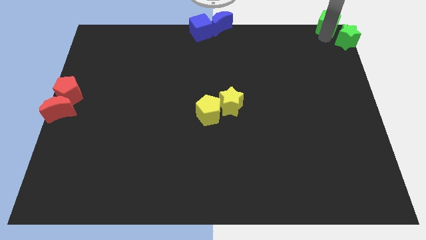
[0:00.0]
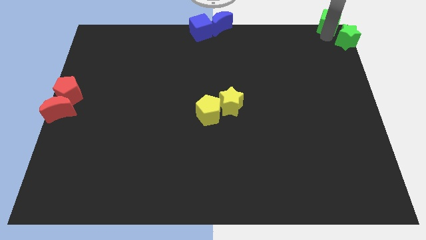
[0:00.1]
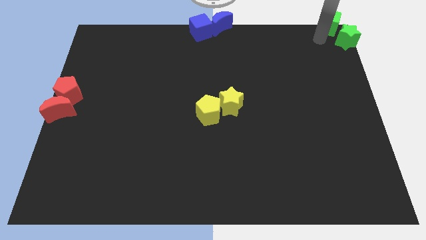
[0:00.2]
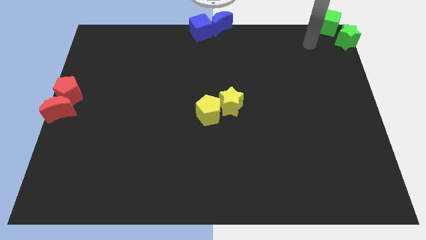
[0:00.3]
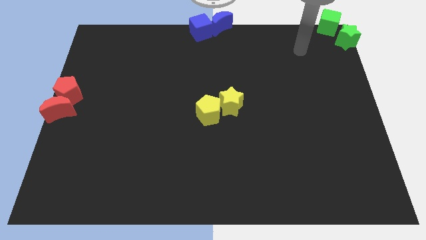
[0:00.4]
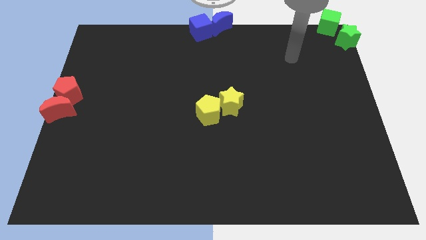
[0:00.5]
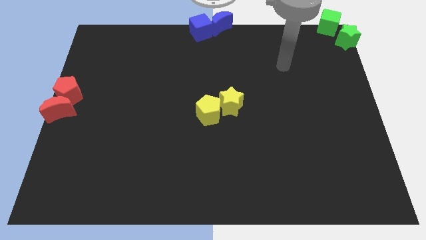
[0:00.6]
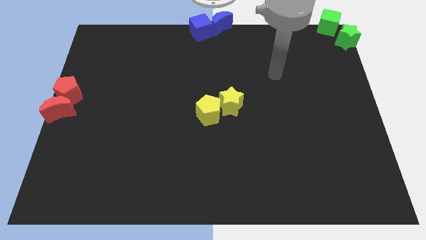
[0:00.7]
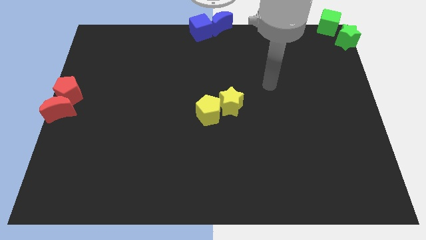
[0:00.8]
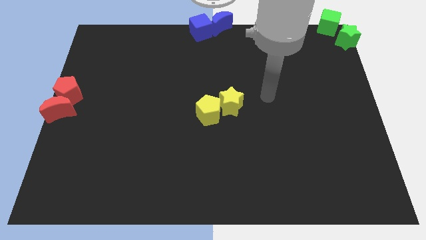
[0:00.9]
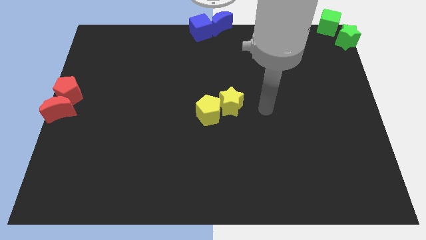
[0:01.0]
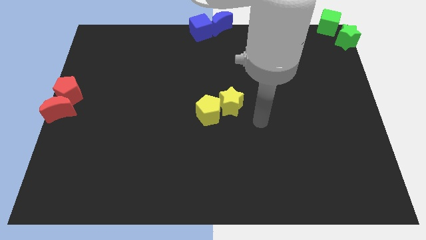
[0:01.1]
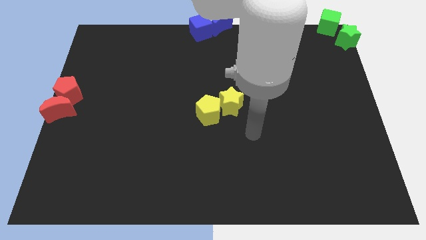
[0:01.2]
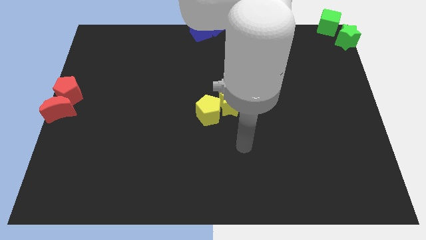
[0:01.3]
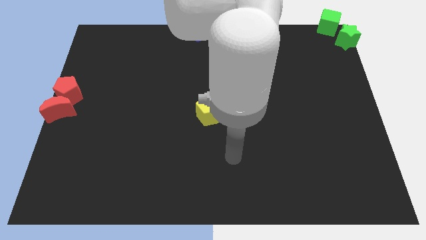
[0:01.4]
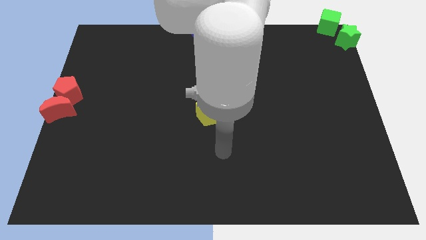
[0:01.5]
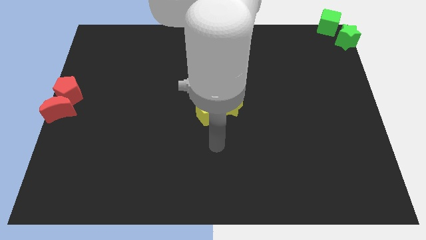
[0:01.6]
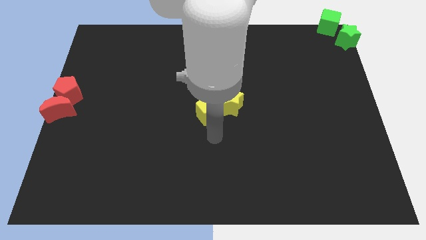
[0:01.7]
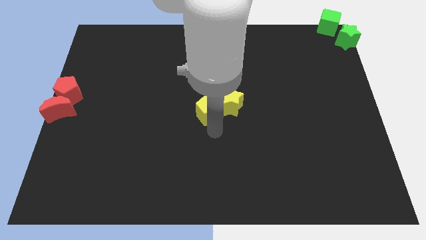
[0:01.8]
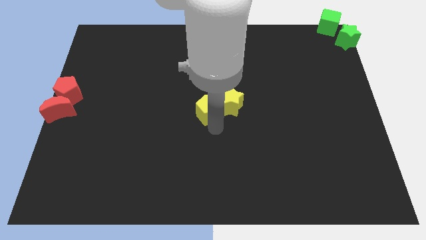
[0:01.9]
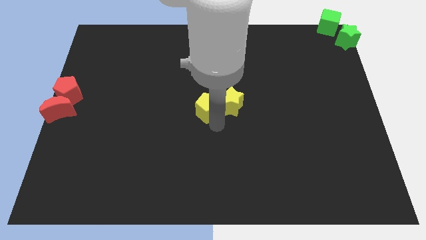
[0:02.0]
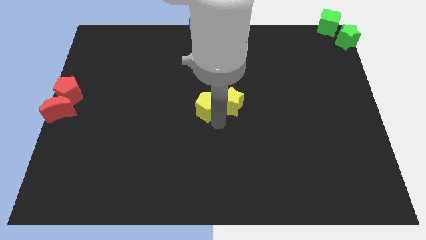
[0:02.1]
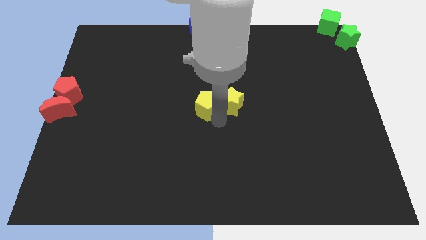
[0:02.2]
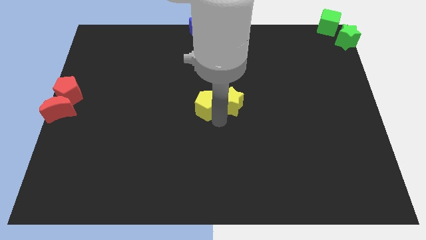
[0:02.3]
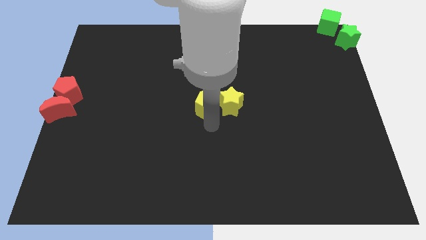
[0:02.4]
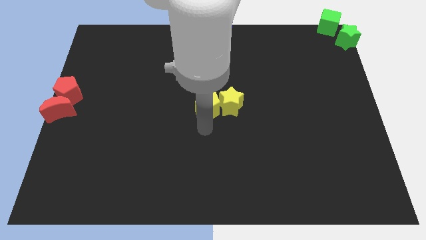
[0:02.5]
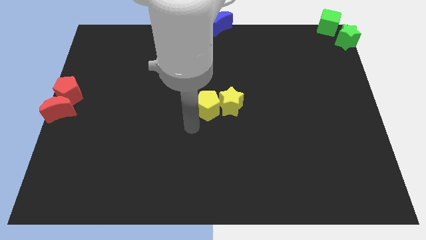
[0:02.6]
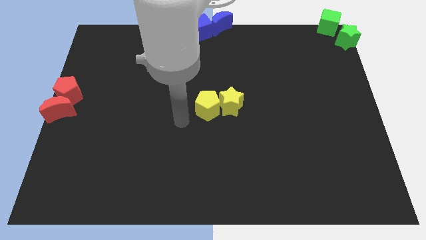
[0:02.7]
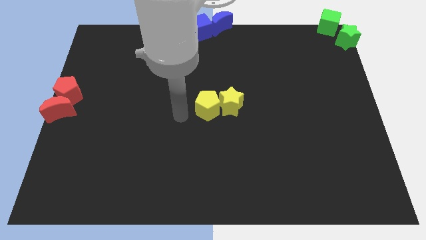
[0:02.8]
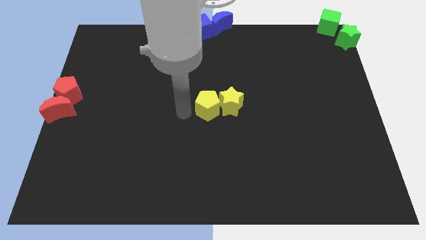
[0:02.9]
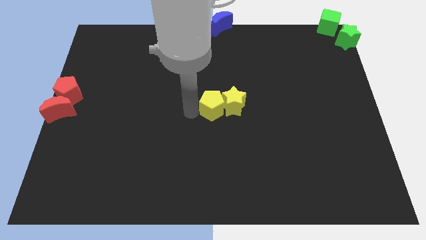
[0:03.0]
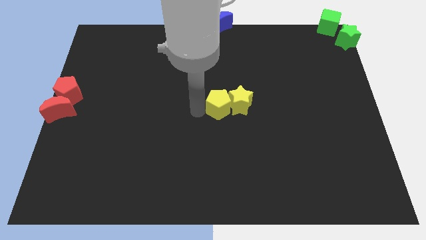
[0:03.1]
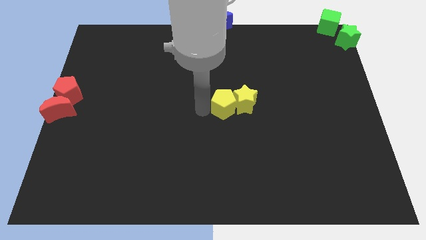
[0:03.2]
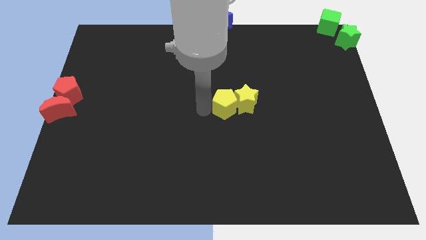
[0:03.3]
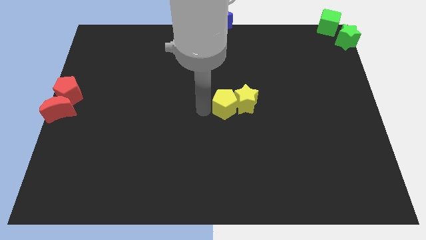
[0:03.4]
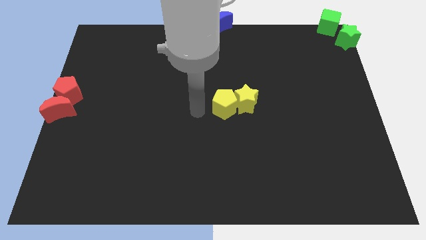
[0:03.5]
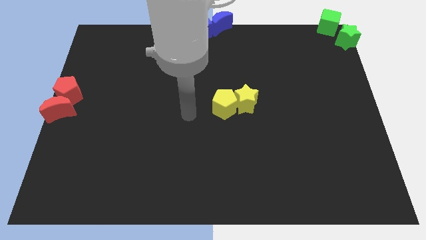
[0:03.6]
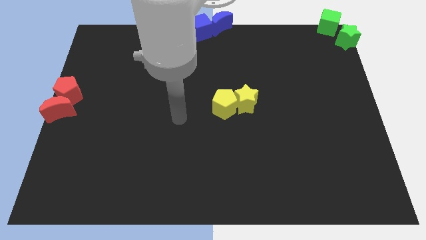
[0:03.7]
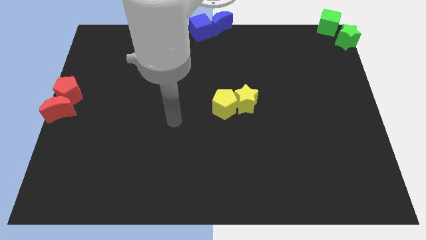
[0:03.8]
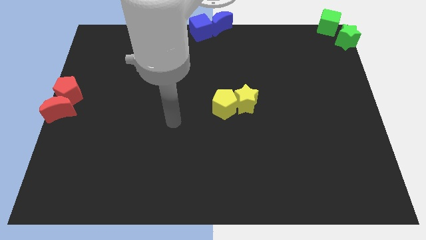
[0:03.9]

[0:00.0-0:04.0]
move the group of yellow blocks slightly to the right

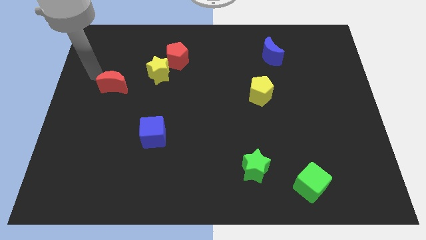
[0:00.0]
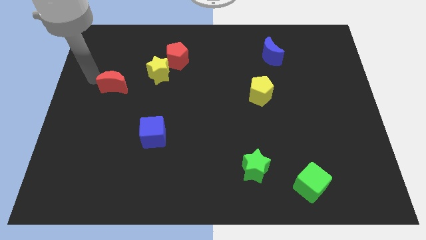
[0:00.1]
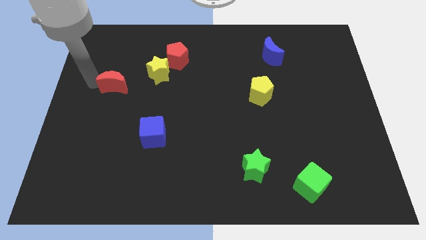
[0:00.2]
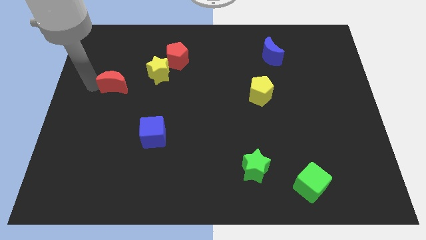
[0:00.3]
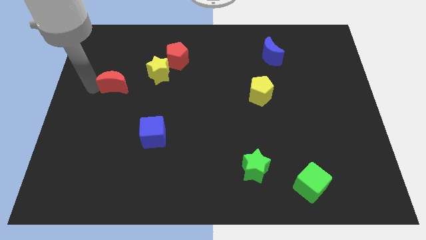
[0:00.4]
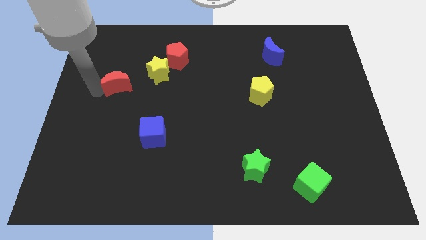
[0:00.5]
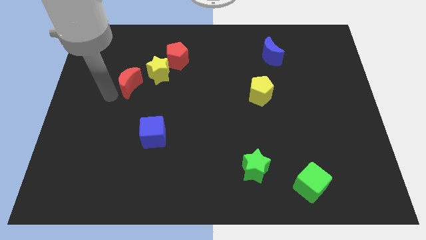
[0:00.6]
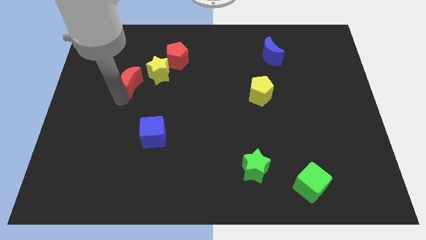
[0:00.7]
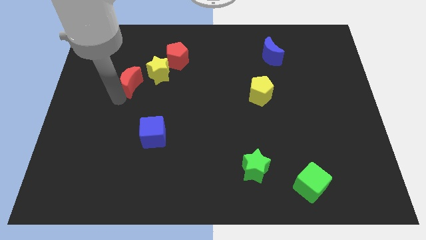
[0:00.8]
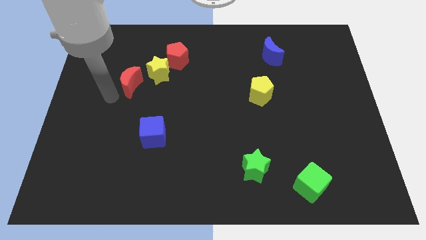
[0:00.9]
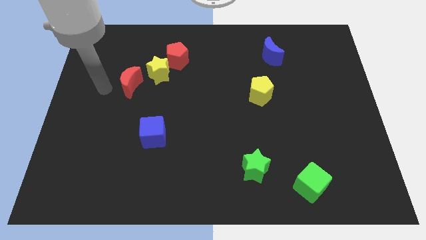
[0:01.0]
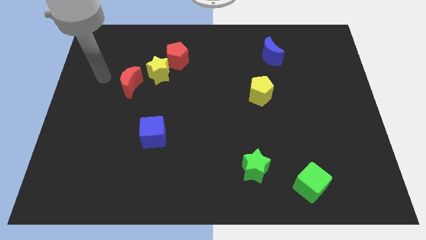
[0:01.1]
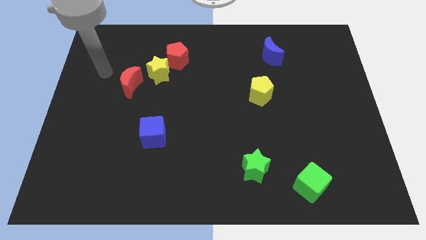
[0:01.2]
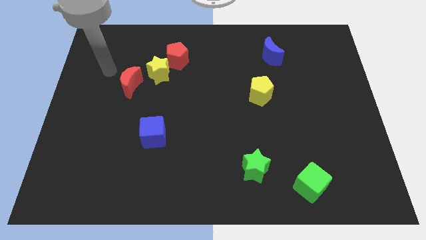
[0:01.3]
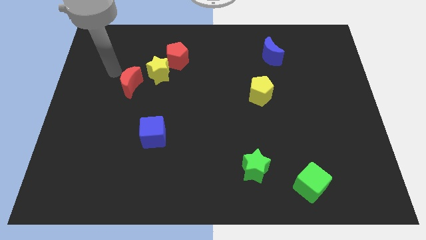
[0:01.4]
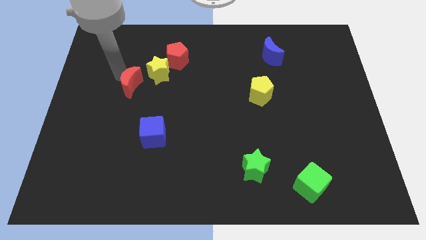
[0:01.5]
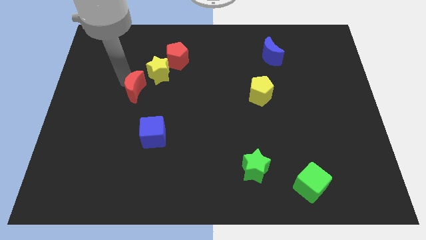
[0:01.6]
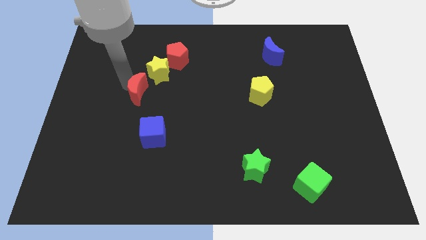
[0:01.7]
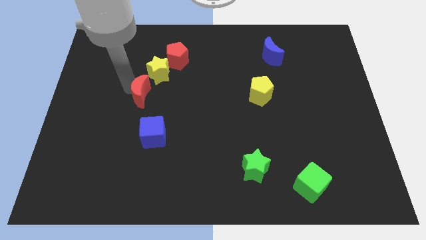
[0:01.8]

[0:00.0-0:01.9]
push the red crescent towards the down side of the yellow star

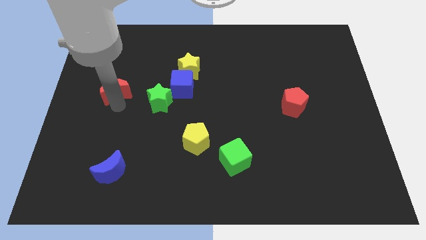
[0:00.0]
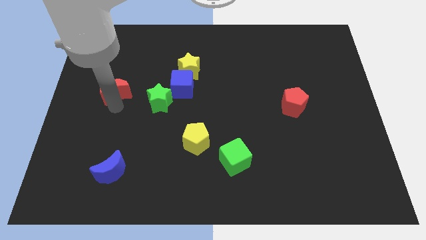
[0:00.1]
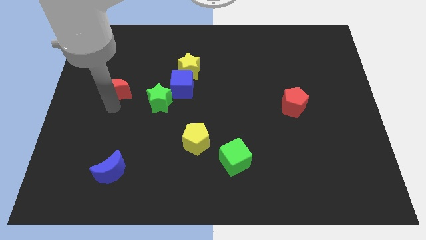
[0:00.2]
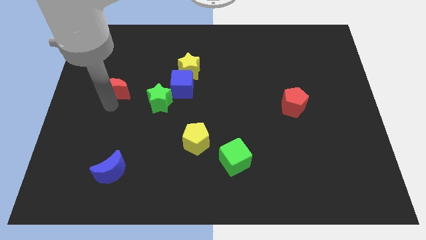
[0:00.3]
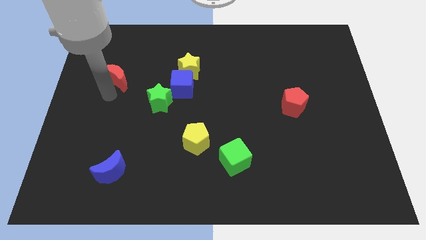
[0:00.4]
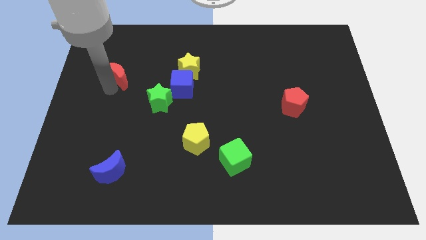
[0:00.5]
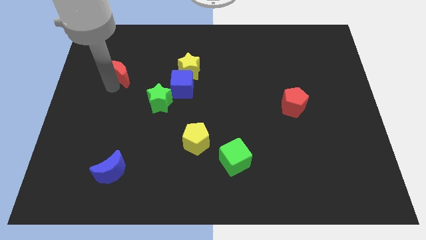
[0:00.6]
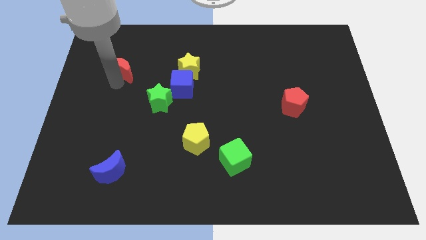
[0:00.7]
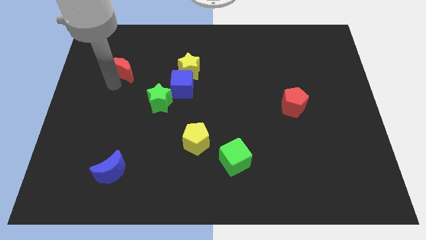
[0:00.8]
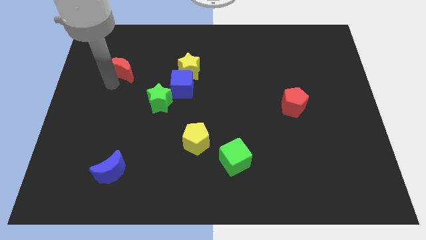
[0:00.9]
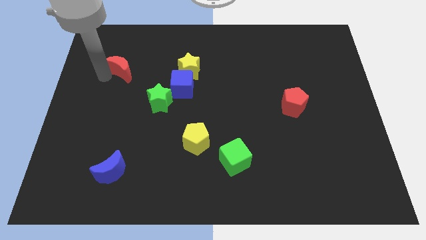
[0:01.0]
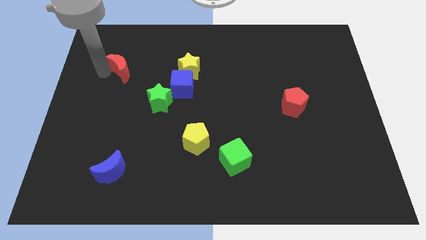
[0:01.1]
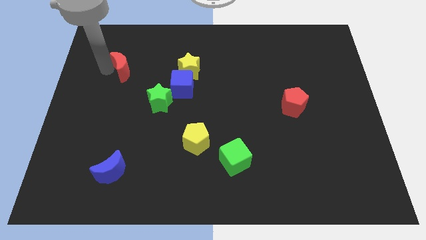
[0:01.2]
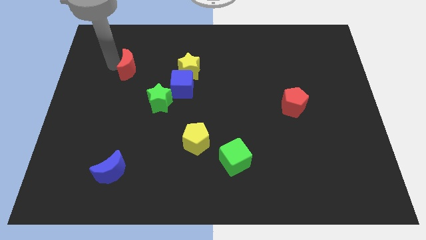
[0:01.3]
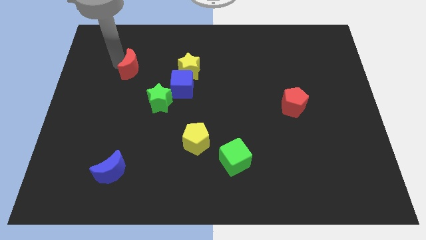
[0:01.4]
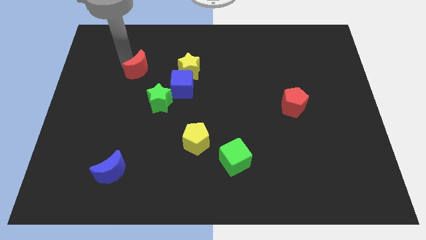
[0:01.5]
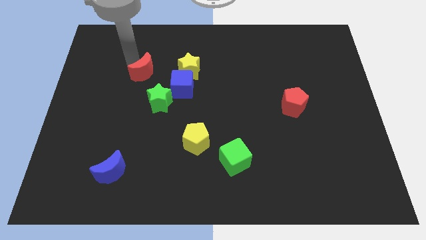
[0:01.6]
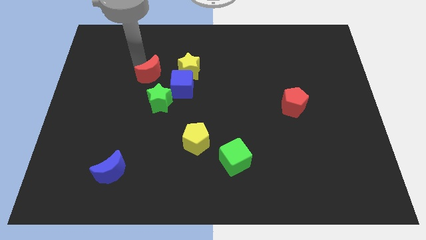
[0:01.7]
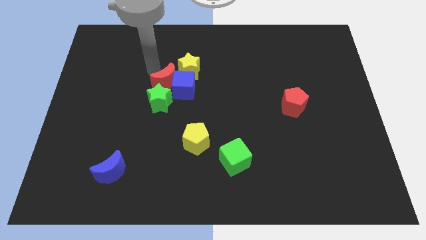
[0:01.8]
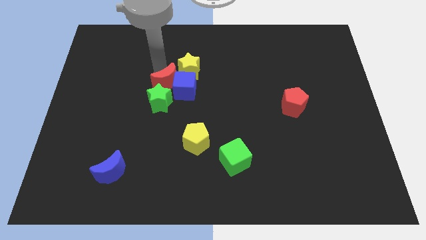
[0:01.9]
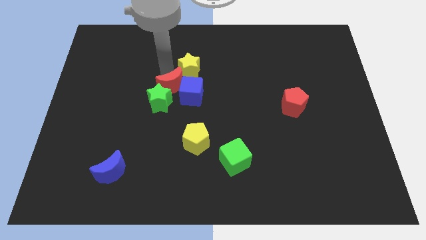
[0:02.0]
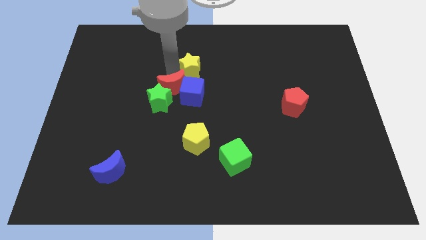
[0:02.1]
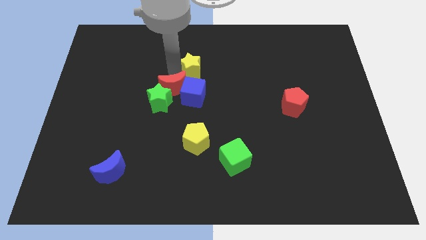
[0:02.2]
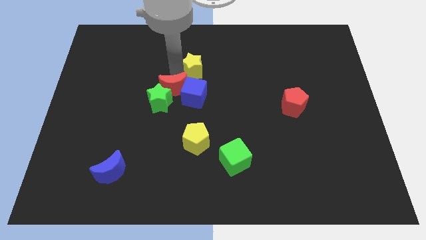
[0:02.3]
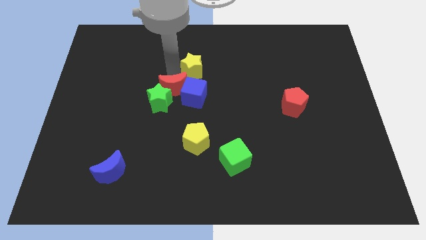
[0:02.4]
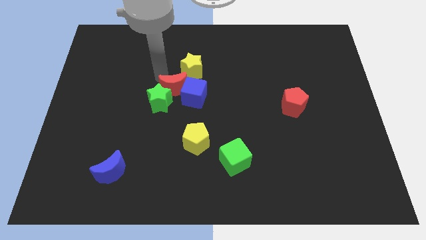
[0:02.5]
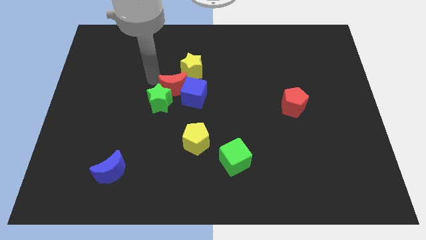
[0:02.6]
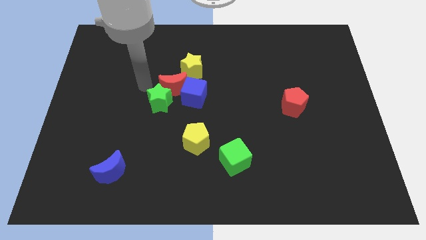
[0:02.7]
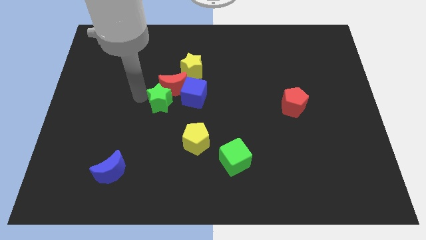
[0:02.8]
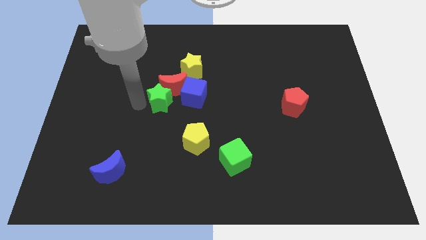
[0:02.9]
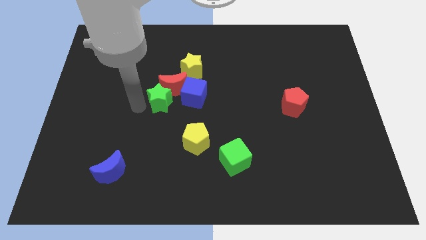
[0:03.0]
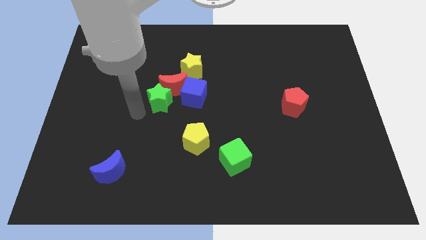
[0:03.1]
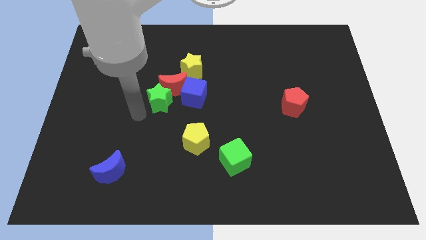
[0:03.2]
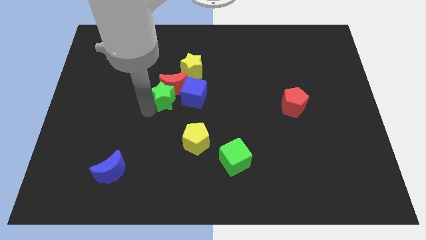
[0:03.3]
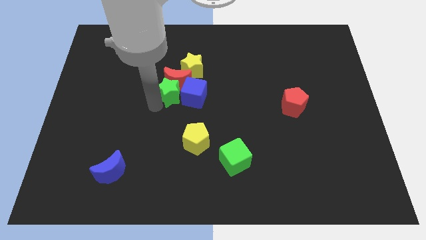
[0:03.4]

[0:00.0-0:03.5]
place the moon between two stars
